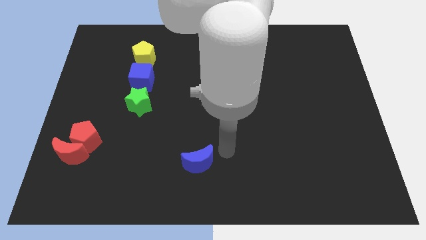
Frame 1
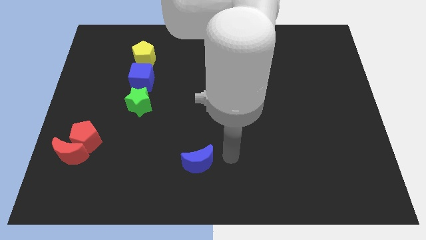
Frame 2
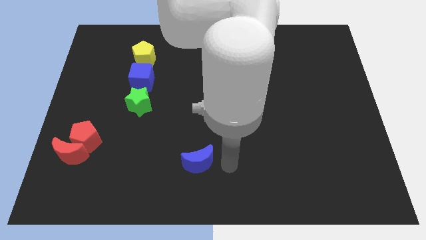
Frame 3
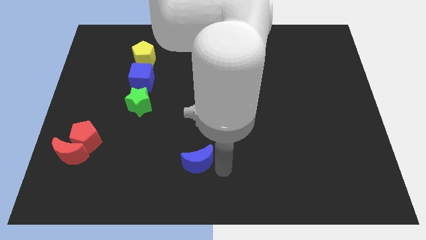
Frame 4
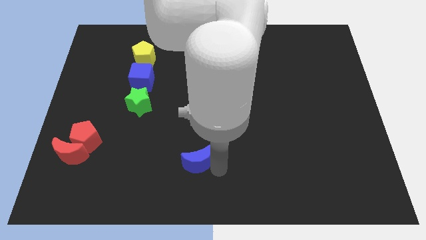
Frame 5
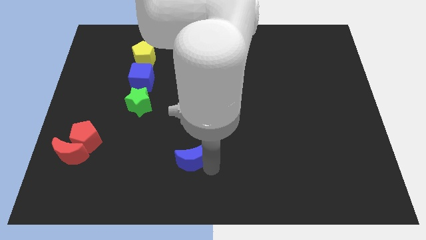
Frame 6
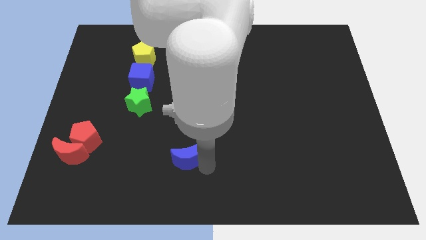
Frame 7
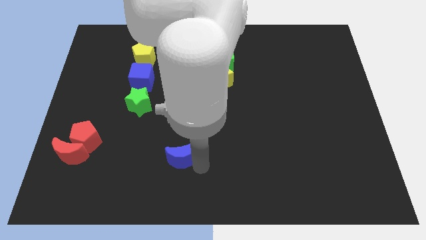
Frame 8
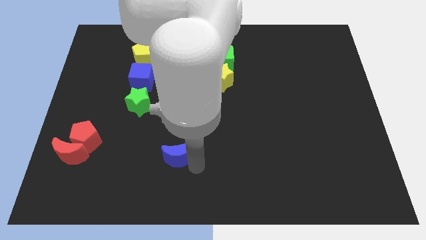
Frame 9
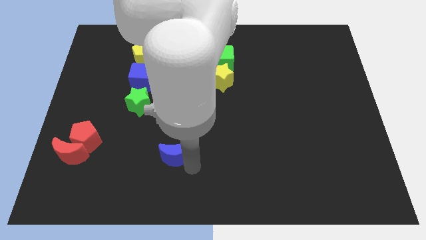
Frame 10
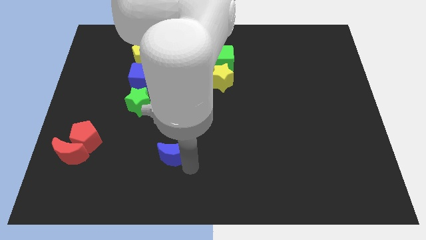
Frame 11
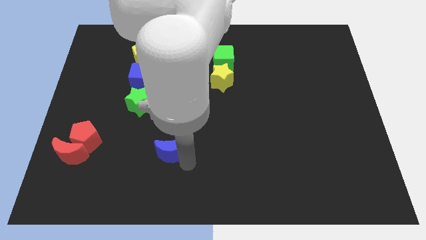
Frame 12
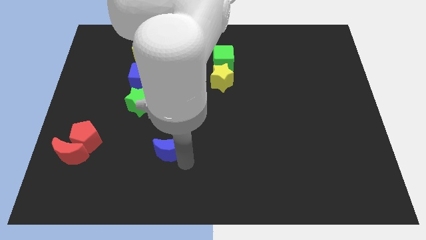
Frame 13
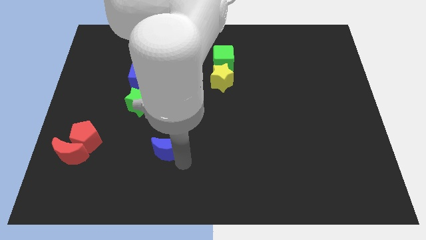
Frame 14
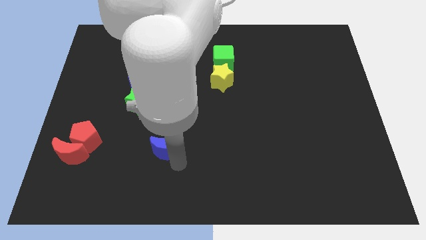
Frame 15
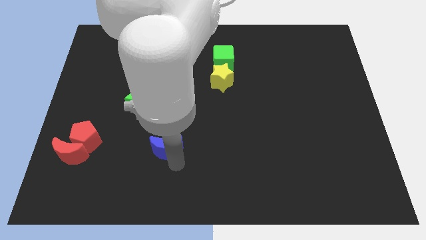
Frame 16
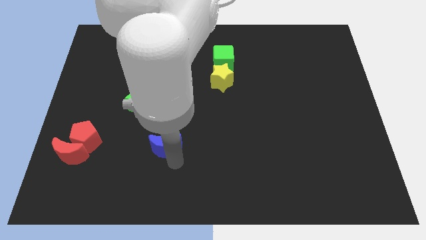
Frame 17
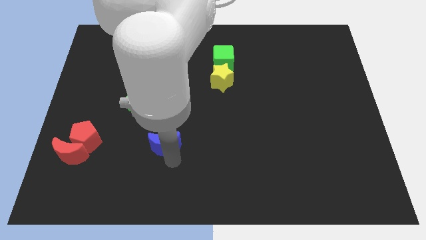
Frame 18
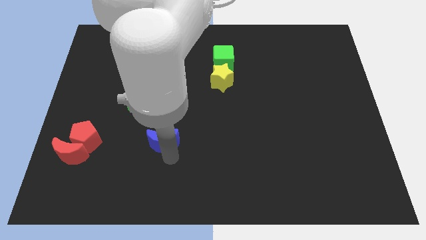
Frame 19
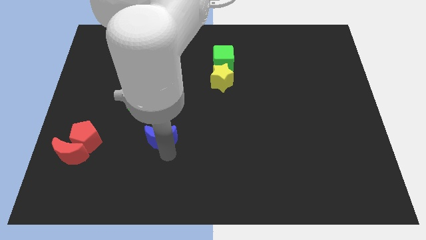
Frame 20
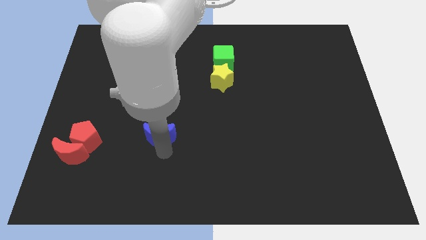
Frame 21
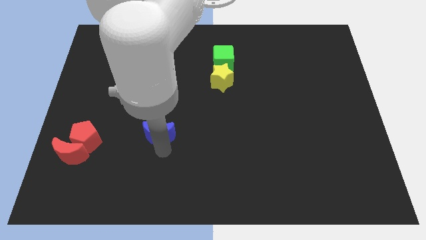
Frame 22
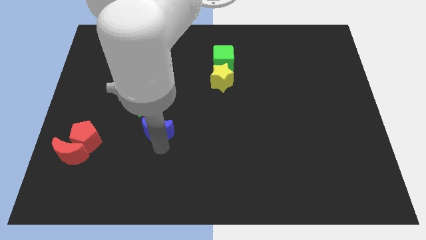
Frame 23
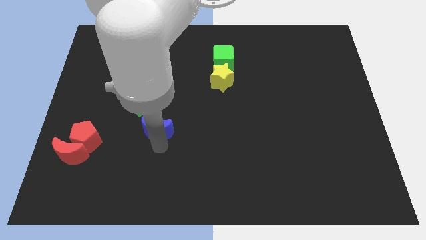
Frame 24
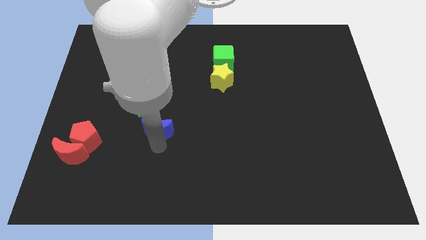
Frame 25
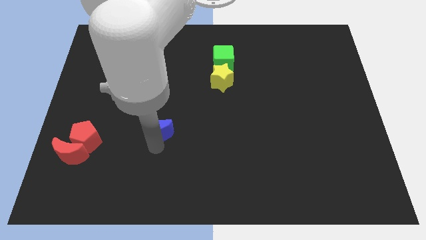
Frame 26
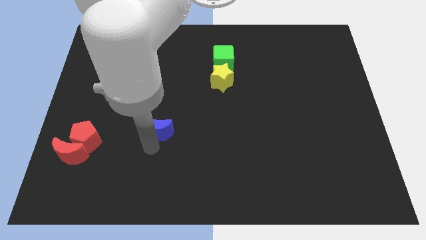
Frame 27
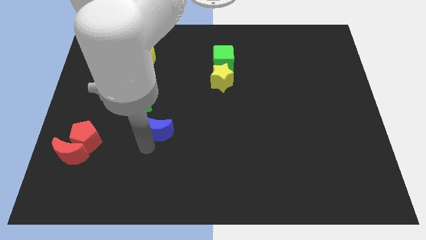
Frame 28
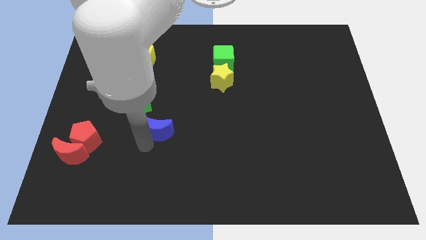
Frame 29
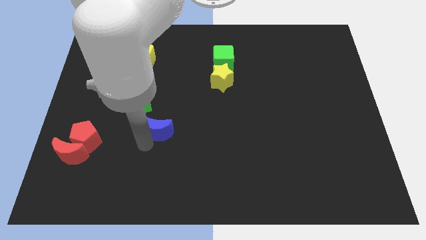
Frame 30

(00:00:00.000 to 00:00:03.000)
push the blue crescent towards the green star

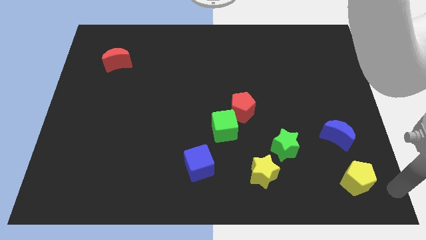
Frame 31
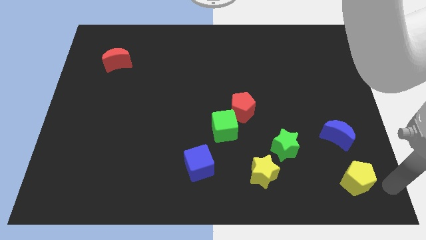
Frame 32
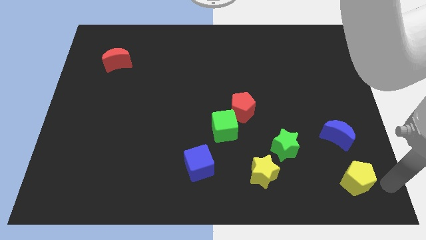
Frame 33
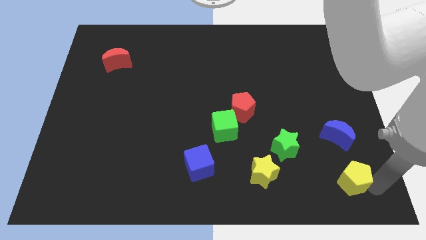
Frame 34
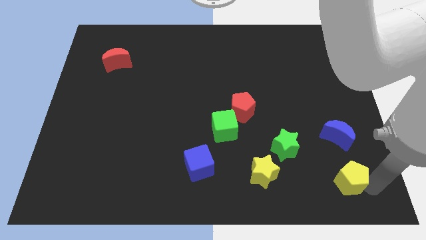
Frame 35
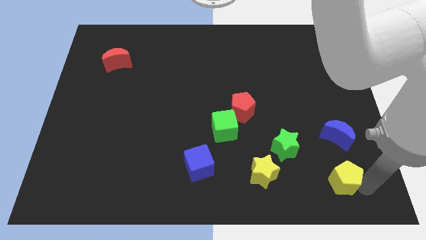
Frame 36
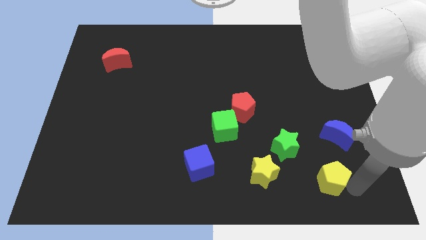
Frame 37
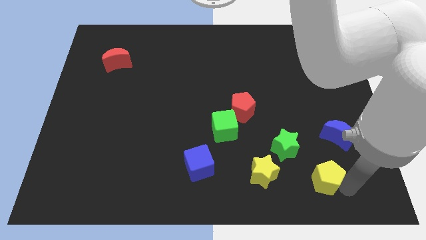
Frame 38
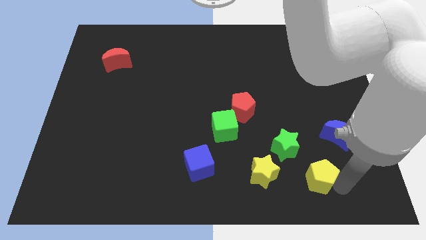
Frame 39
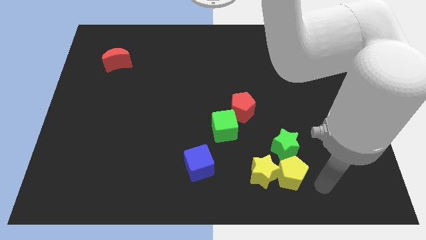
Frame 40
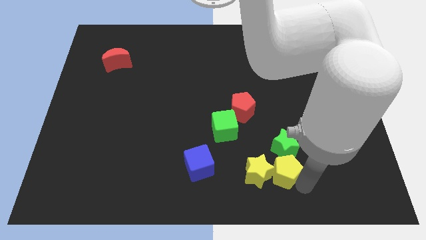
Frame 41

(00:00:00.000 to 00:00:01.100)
push the yellow pentagon into yellow star

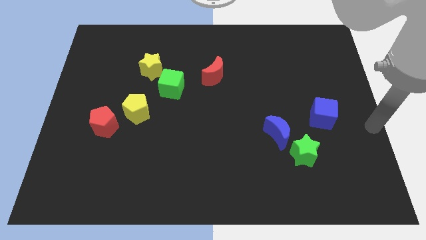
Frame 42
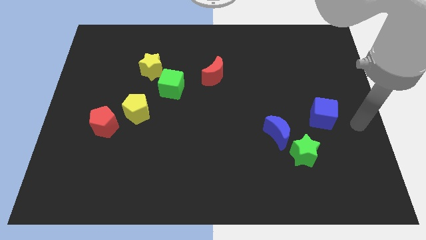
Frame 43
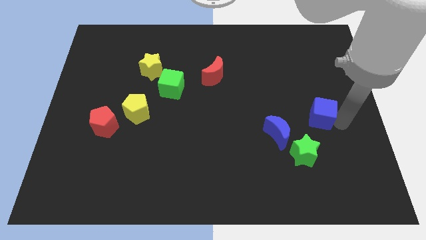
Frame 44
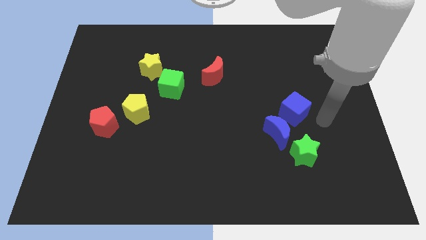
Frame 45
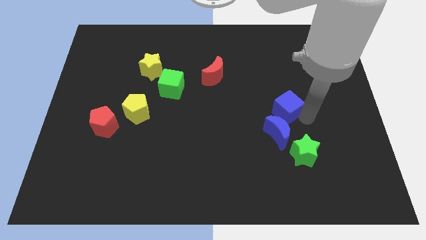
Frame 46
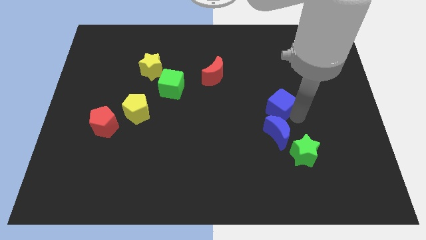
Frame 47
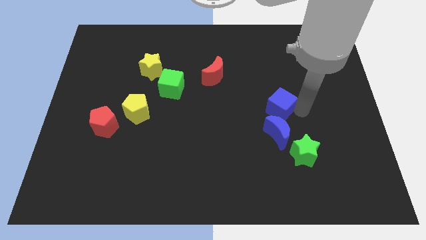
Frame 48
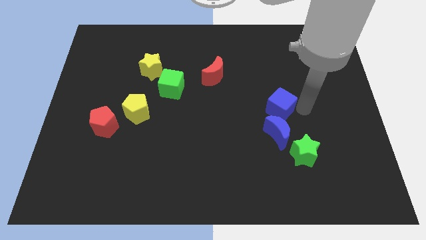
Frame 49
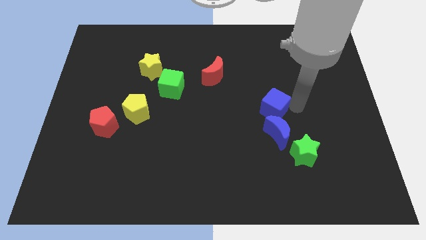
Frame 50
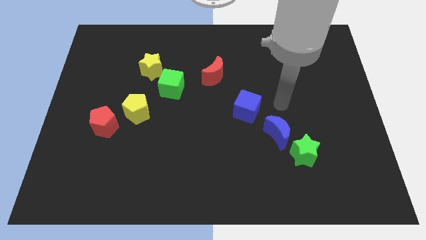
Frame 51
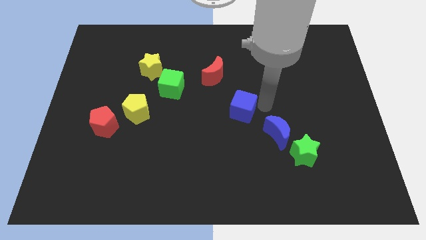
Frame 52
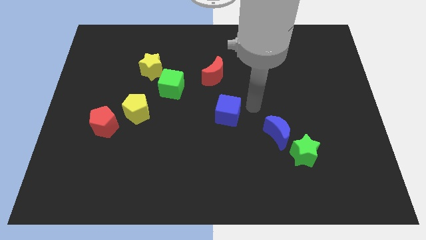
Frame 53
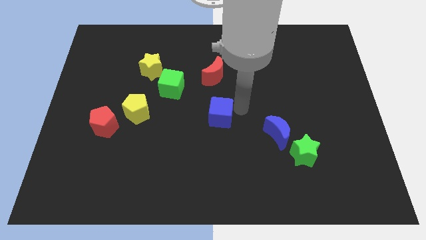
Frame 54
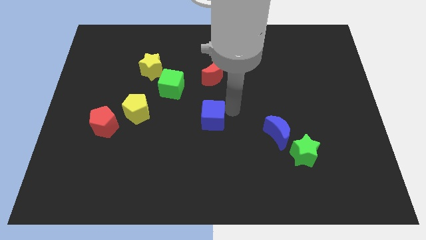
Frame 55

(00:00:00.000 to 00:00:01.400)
move the blue cube to the center of the board

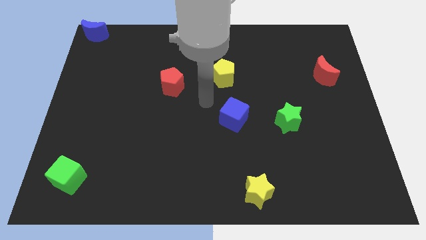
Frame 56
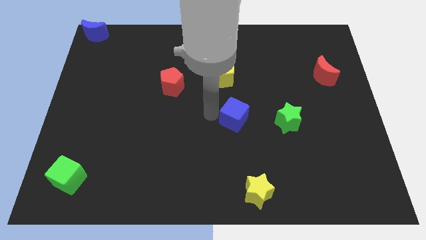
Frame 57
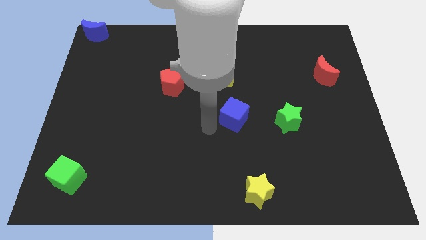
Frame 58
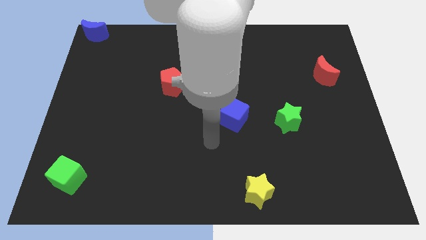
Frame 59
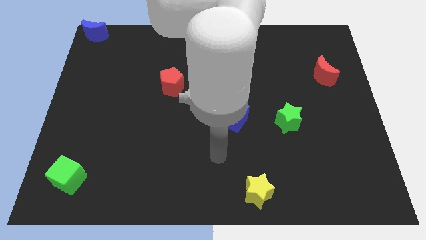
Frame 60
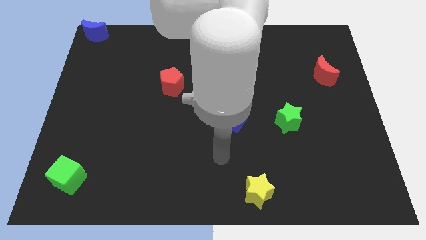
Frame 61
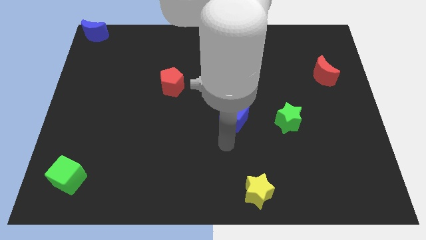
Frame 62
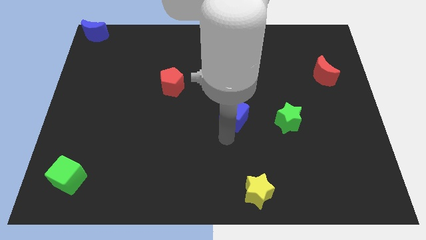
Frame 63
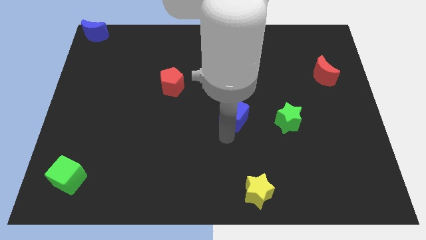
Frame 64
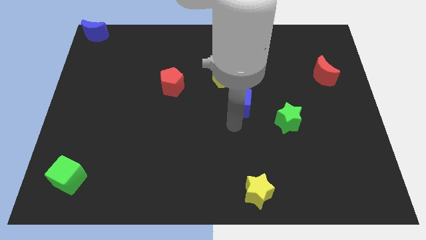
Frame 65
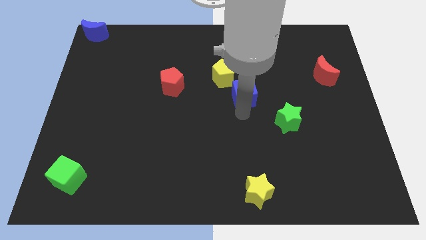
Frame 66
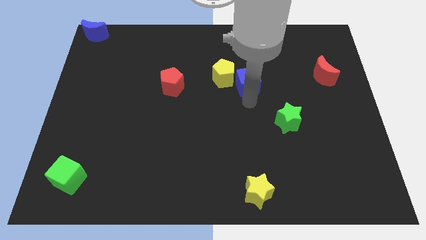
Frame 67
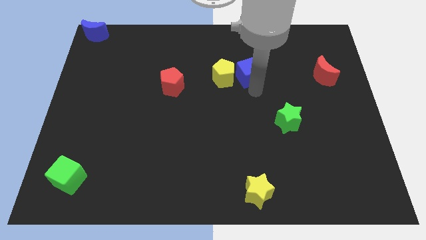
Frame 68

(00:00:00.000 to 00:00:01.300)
push the blue cube to the right of the yellow pentagon

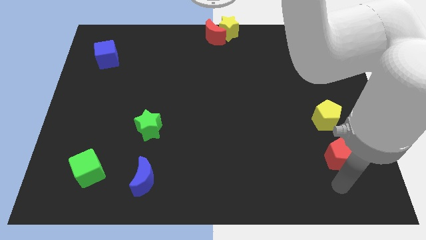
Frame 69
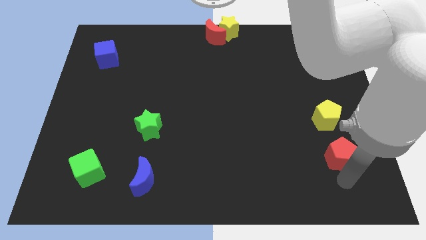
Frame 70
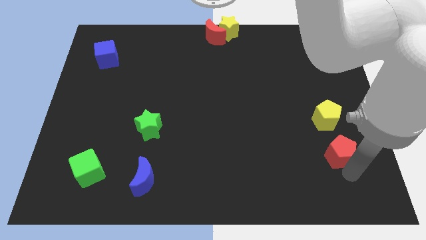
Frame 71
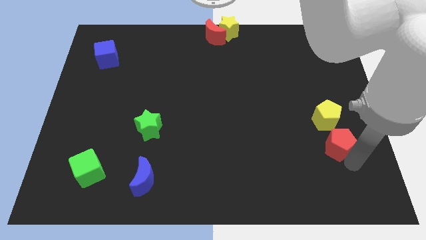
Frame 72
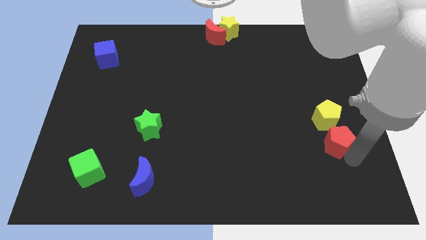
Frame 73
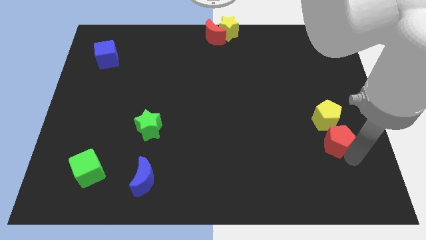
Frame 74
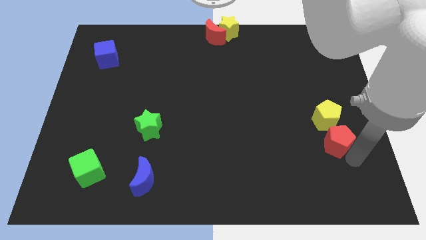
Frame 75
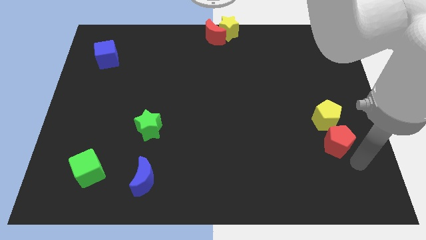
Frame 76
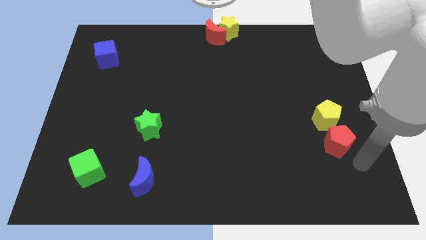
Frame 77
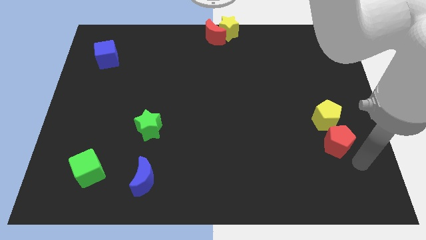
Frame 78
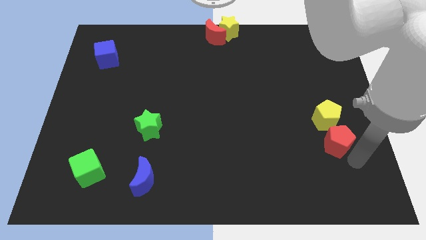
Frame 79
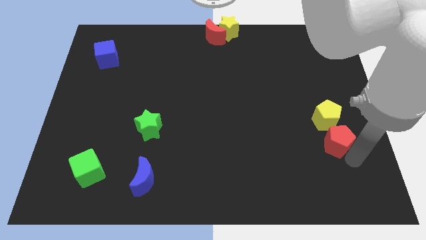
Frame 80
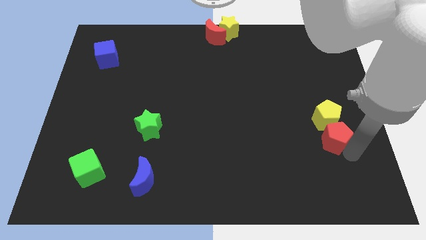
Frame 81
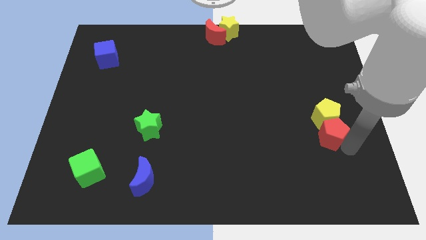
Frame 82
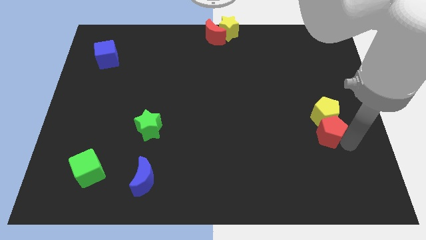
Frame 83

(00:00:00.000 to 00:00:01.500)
push the red pentagon into the yellow pentagon

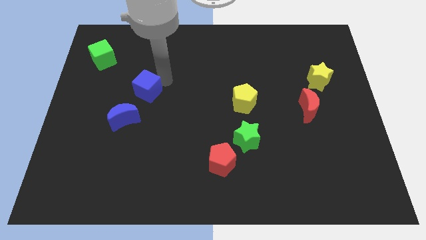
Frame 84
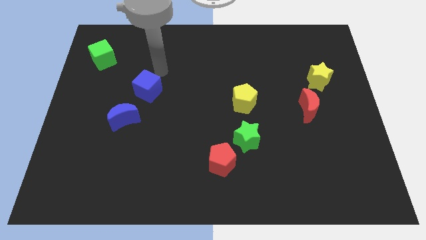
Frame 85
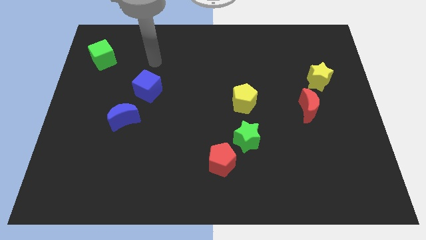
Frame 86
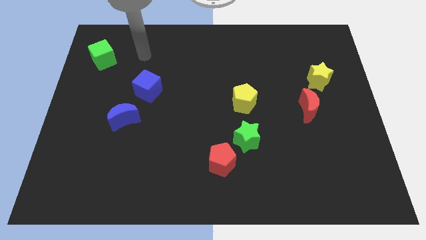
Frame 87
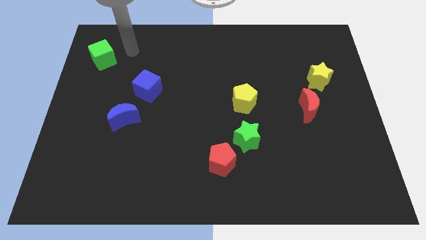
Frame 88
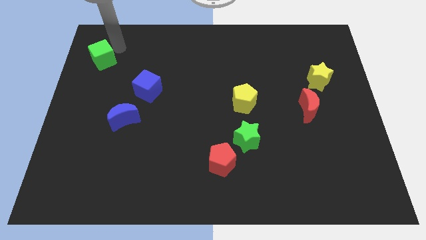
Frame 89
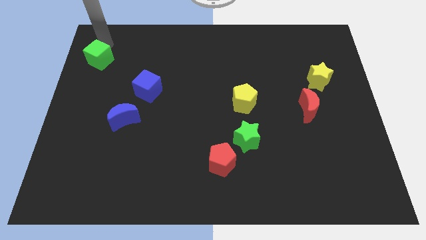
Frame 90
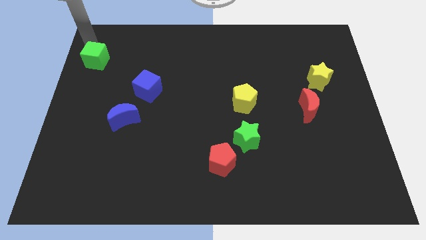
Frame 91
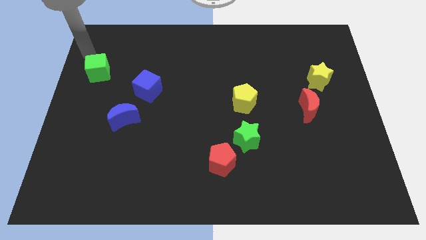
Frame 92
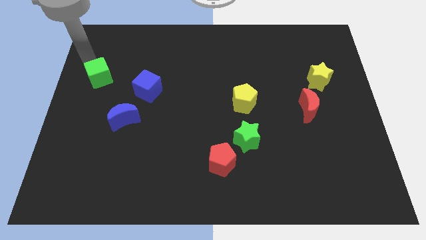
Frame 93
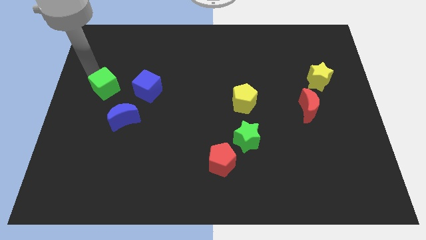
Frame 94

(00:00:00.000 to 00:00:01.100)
point your arm at the top of the green cube
